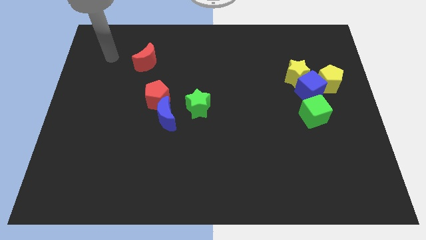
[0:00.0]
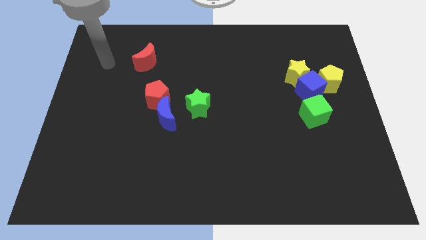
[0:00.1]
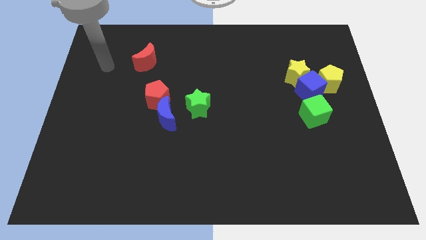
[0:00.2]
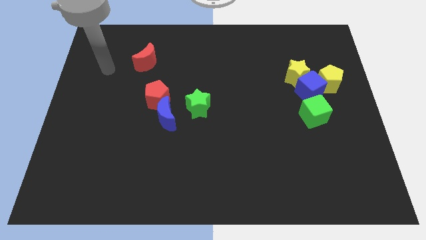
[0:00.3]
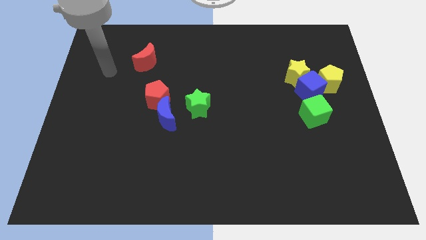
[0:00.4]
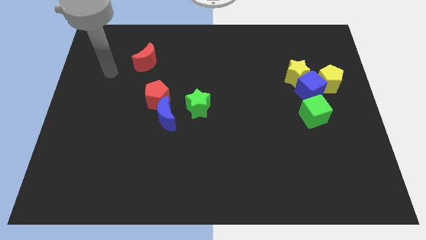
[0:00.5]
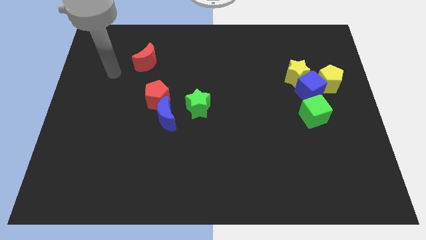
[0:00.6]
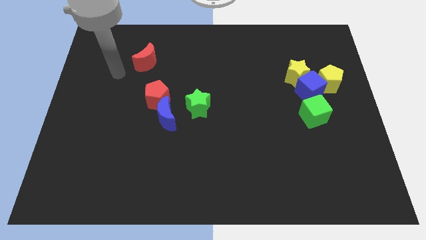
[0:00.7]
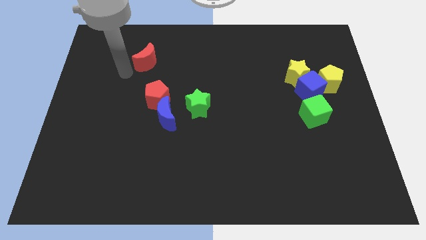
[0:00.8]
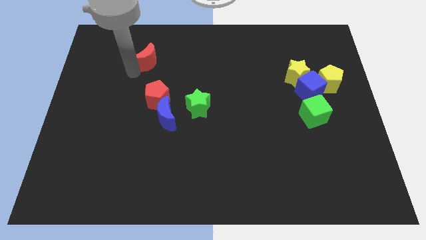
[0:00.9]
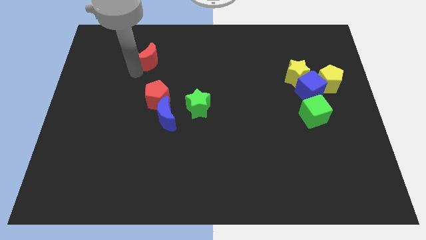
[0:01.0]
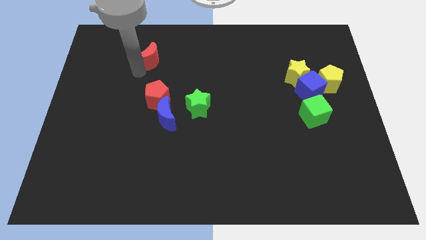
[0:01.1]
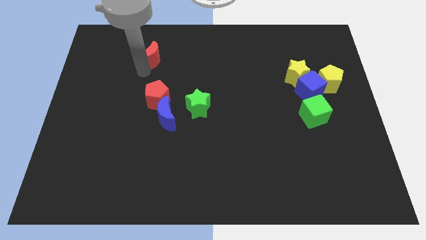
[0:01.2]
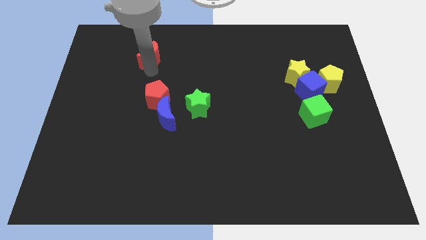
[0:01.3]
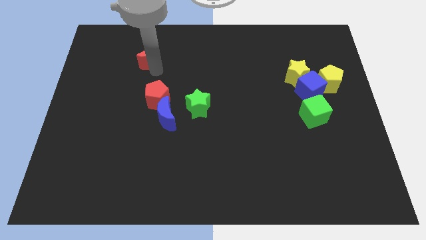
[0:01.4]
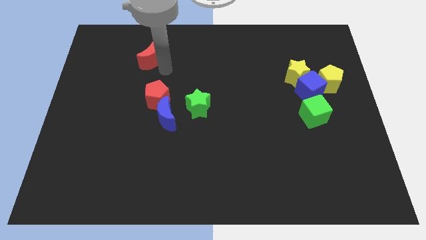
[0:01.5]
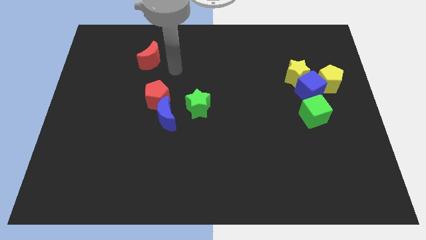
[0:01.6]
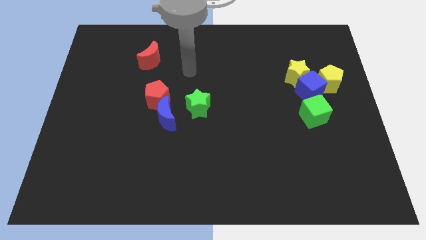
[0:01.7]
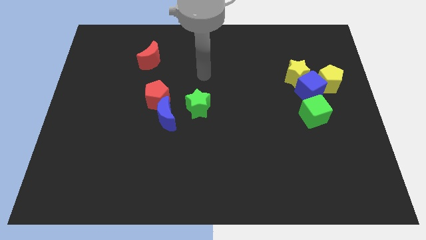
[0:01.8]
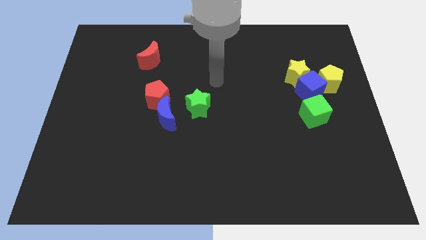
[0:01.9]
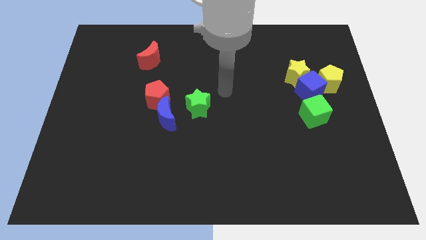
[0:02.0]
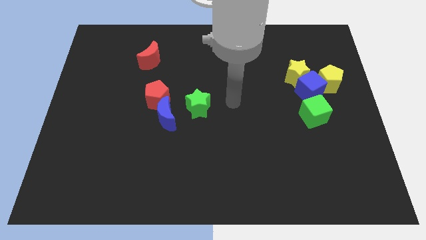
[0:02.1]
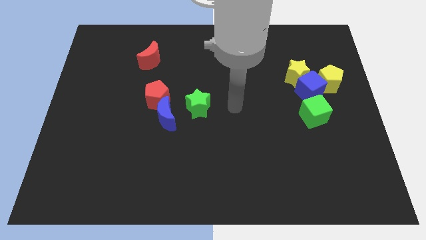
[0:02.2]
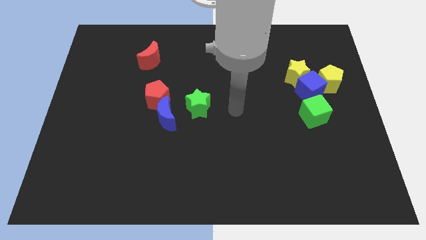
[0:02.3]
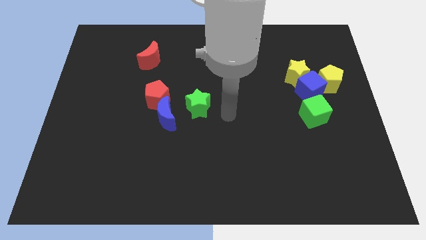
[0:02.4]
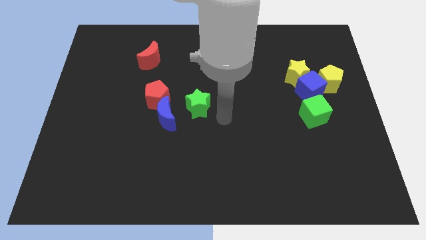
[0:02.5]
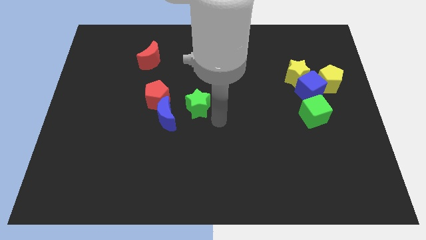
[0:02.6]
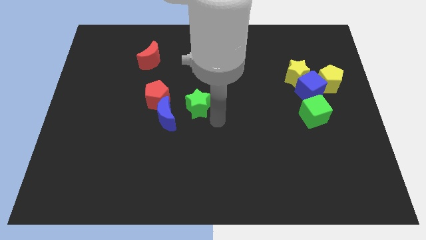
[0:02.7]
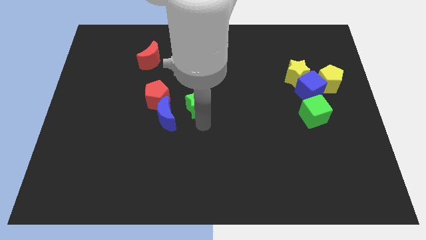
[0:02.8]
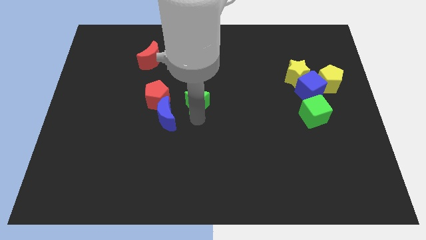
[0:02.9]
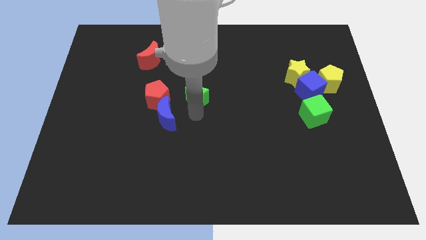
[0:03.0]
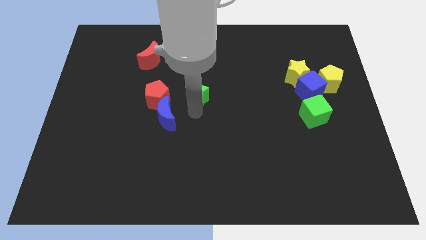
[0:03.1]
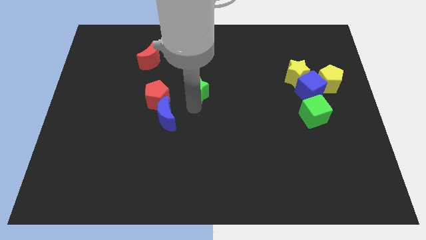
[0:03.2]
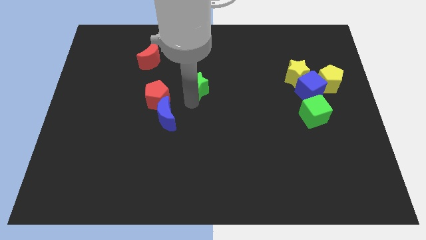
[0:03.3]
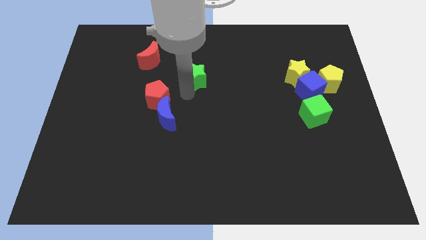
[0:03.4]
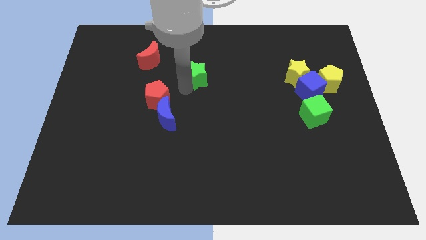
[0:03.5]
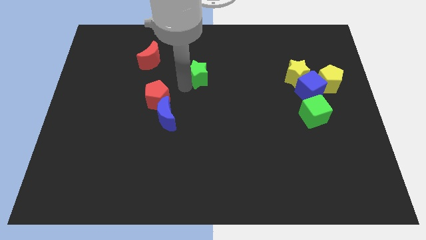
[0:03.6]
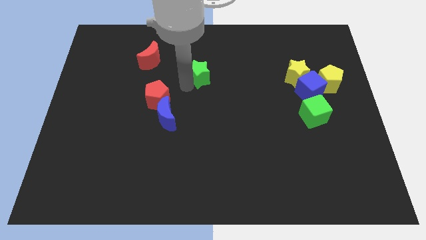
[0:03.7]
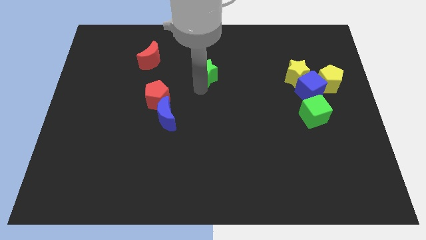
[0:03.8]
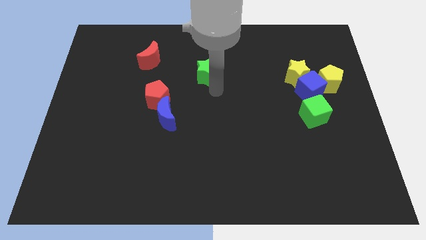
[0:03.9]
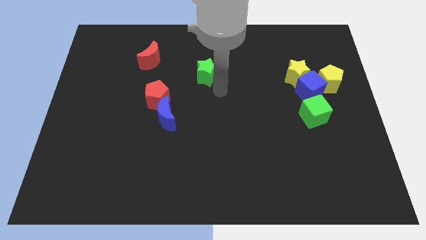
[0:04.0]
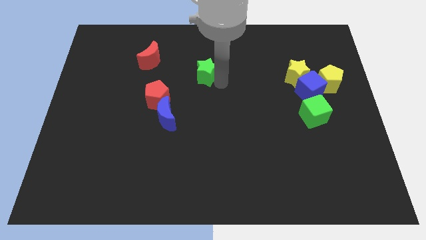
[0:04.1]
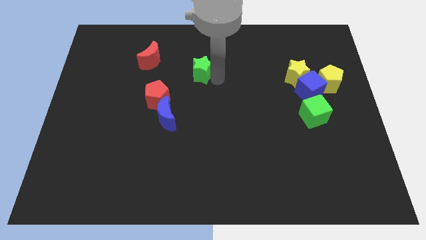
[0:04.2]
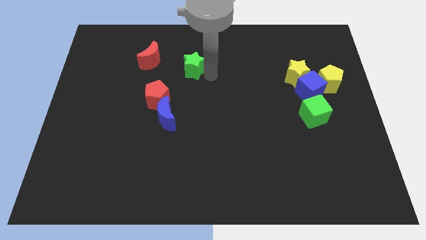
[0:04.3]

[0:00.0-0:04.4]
push the green star to the top

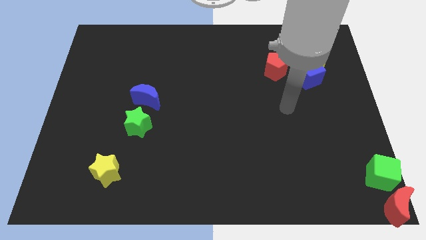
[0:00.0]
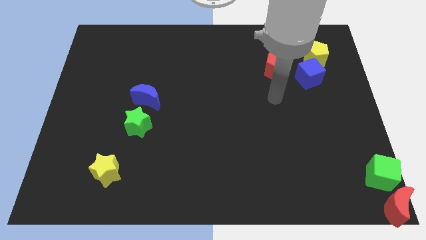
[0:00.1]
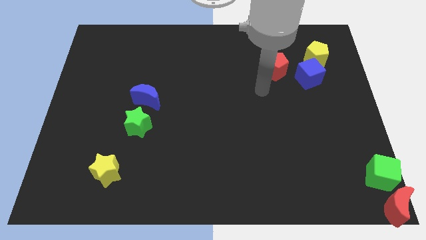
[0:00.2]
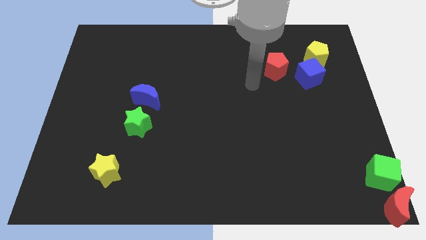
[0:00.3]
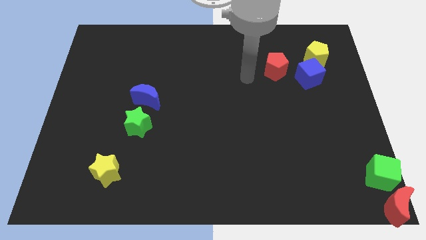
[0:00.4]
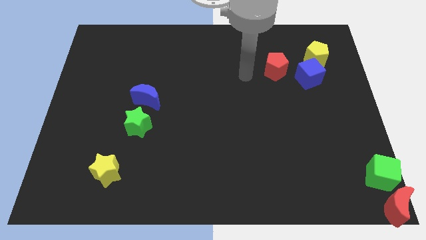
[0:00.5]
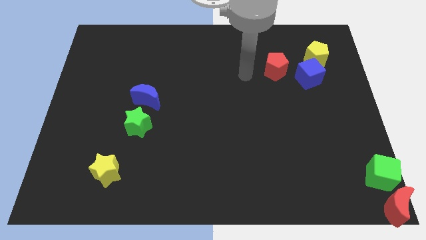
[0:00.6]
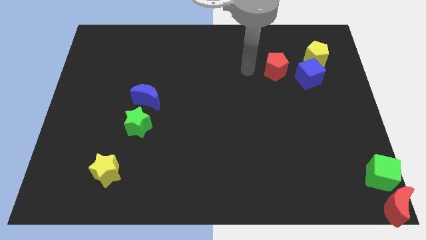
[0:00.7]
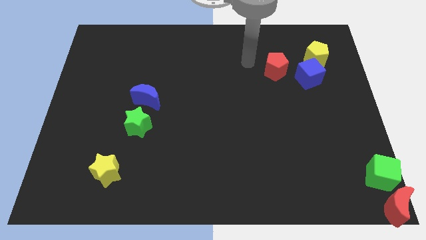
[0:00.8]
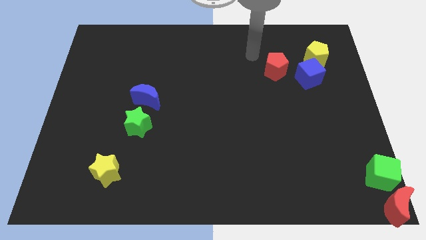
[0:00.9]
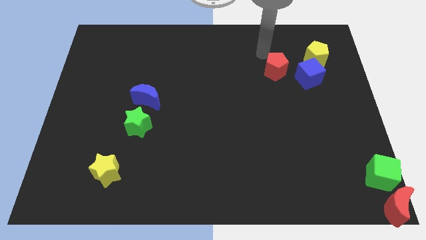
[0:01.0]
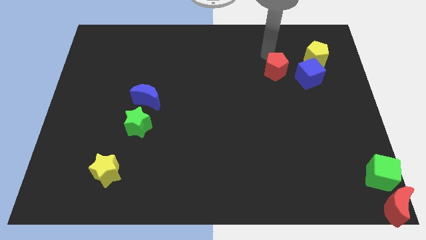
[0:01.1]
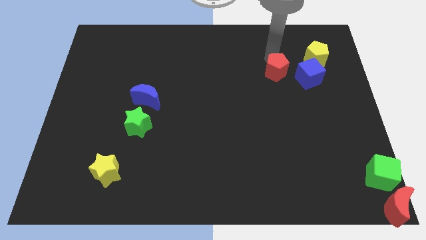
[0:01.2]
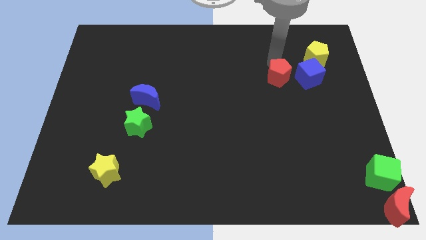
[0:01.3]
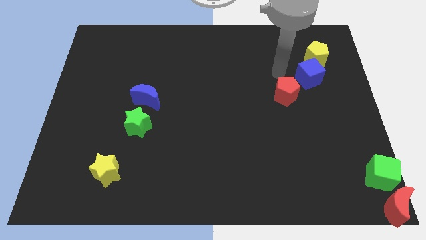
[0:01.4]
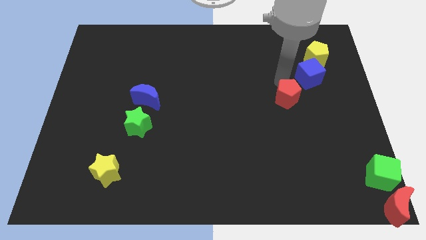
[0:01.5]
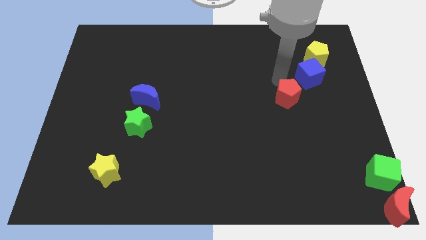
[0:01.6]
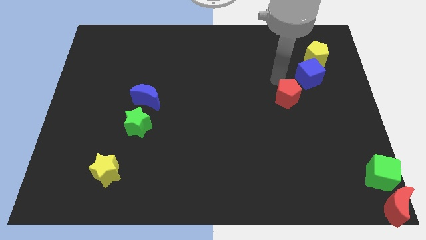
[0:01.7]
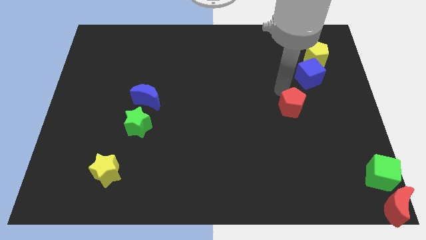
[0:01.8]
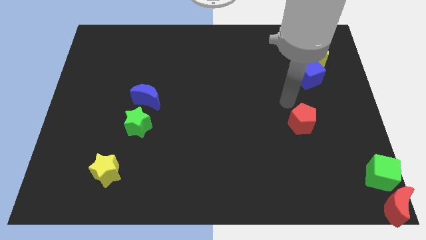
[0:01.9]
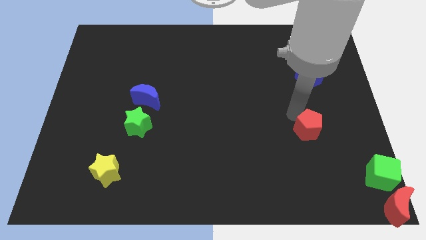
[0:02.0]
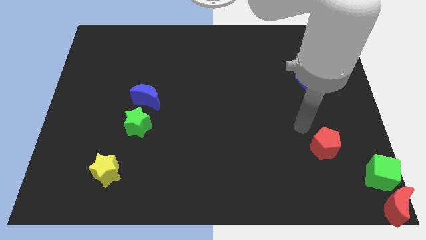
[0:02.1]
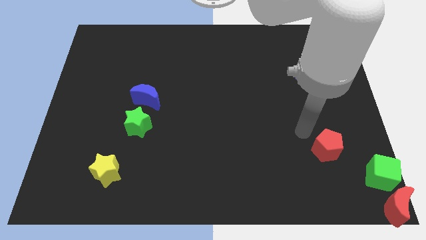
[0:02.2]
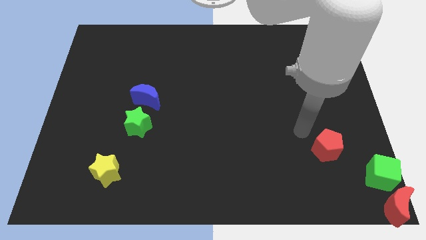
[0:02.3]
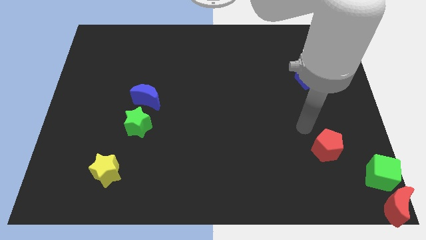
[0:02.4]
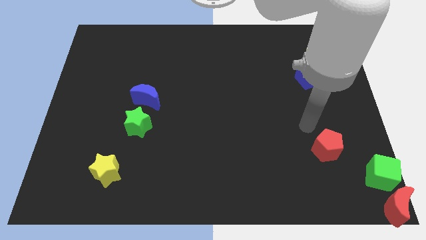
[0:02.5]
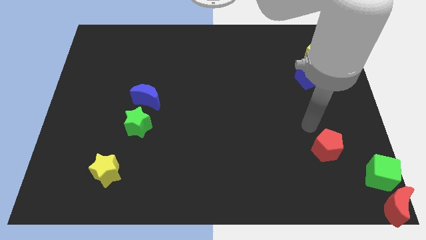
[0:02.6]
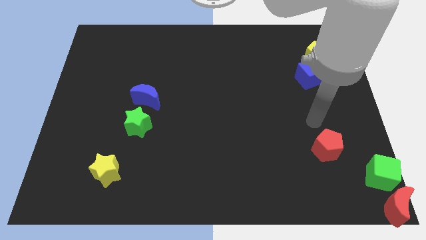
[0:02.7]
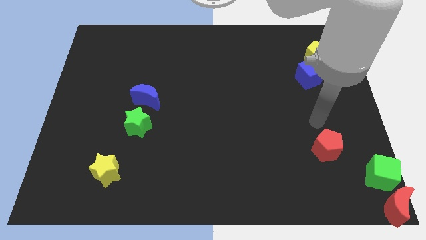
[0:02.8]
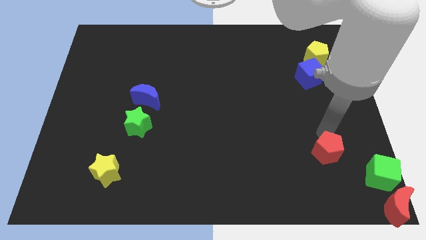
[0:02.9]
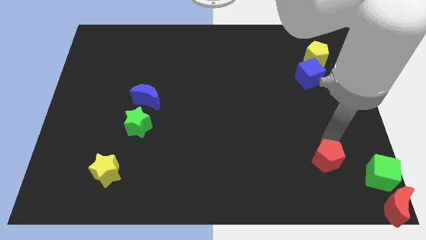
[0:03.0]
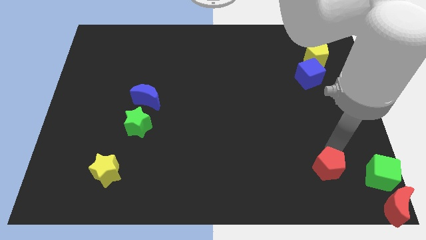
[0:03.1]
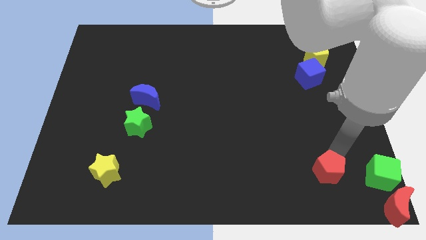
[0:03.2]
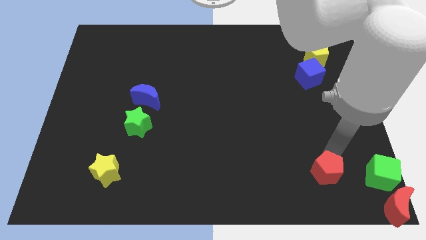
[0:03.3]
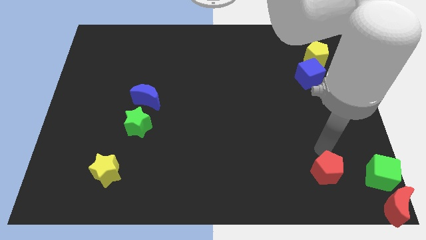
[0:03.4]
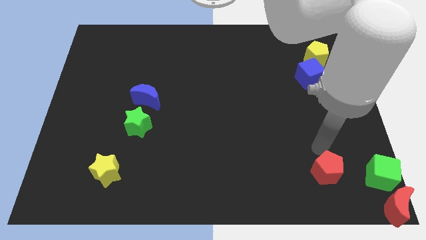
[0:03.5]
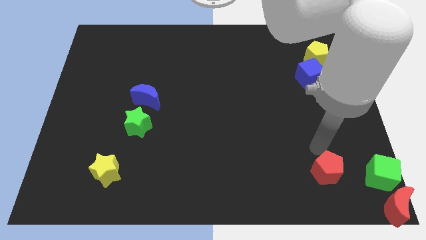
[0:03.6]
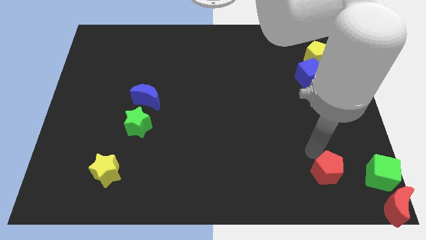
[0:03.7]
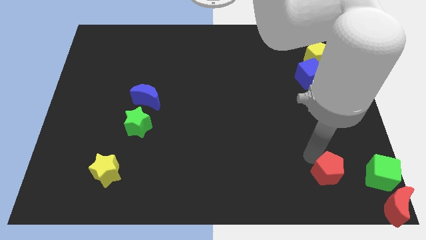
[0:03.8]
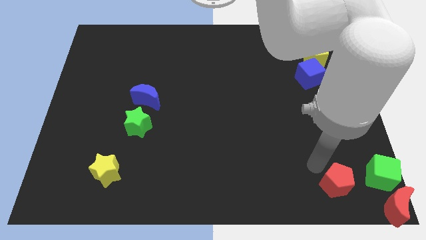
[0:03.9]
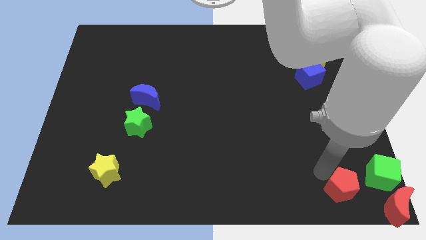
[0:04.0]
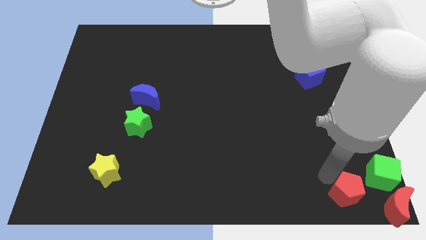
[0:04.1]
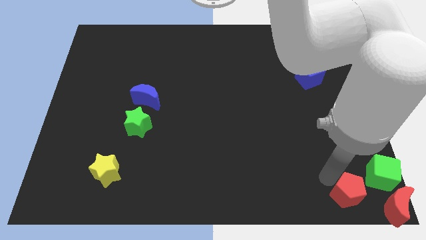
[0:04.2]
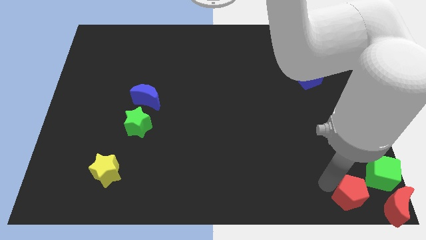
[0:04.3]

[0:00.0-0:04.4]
push the red pentagon downwards of the board

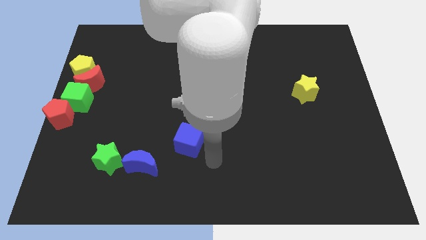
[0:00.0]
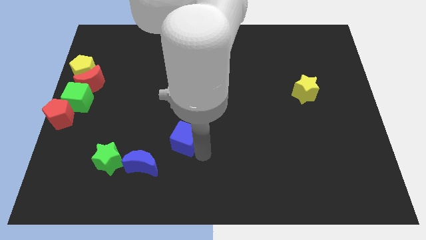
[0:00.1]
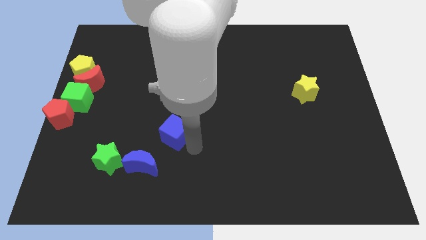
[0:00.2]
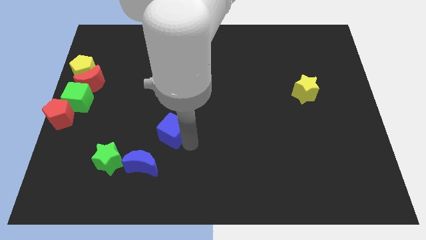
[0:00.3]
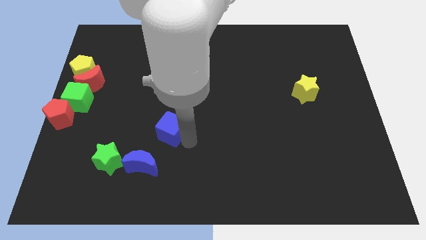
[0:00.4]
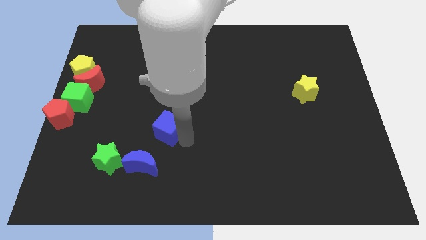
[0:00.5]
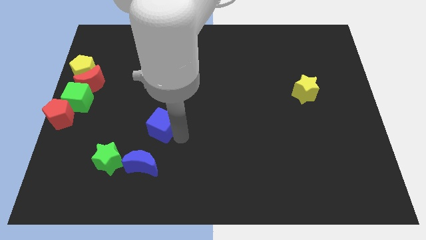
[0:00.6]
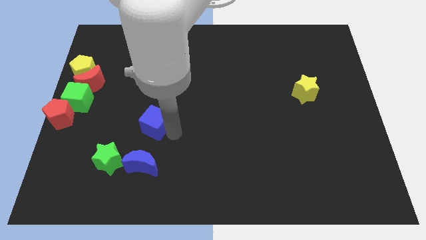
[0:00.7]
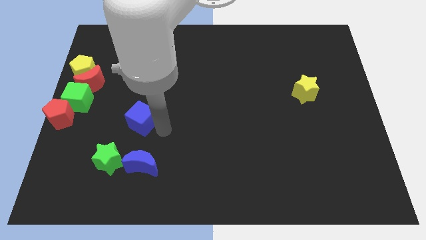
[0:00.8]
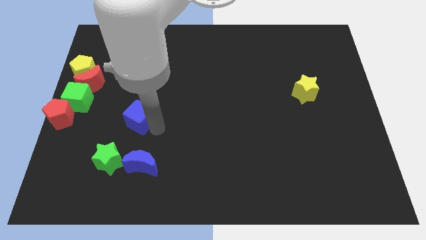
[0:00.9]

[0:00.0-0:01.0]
place the blue cube above the blue crescent
